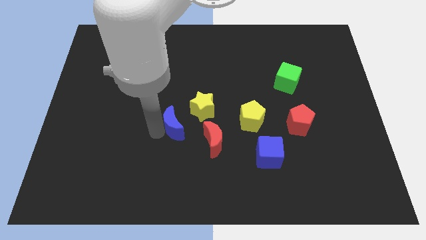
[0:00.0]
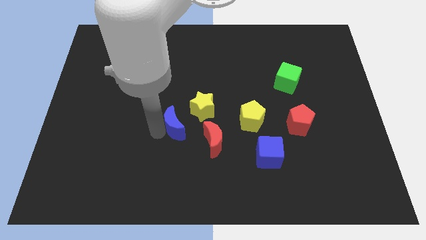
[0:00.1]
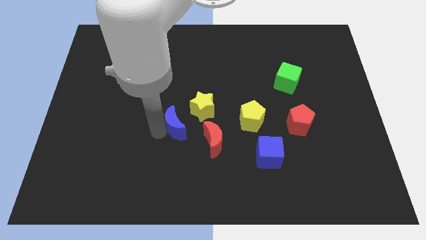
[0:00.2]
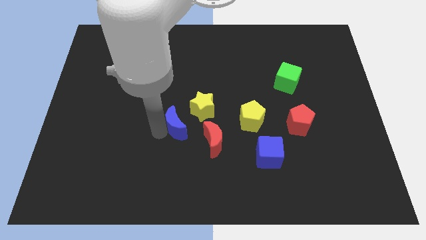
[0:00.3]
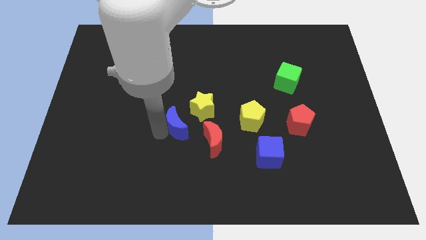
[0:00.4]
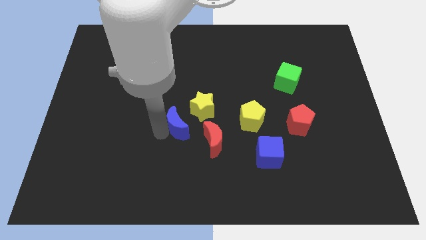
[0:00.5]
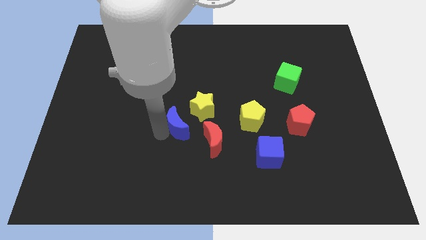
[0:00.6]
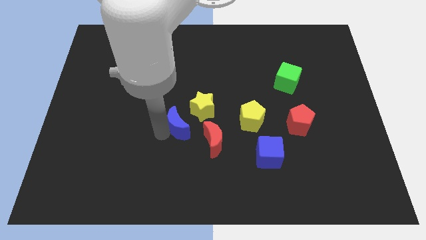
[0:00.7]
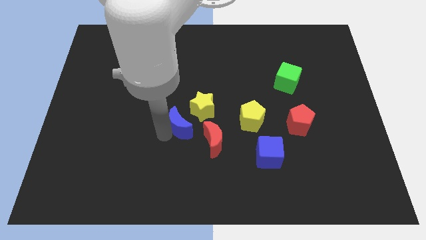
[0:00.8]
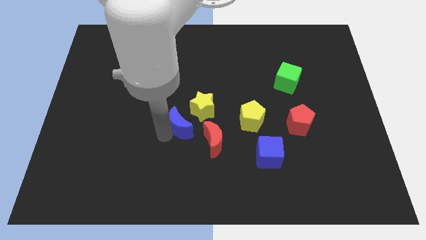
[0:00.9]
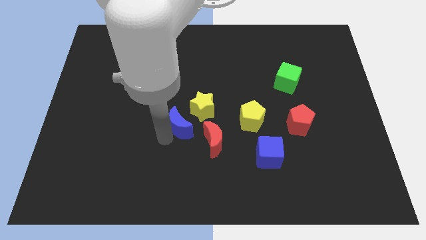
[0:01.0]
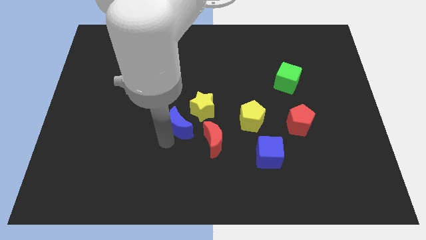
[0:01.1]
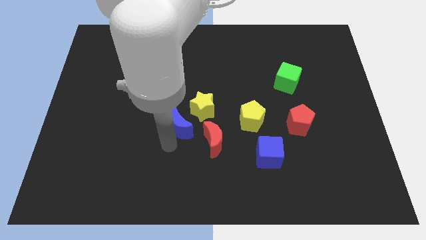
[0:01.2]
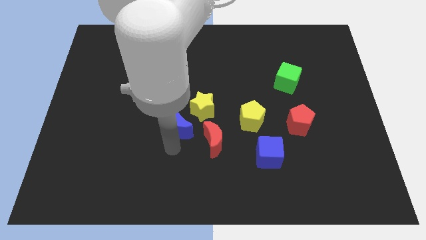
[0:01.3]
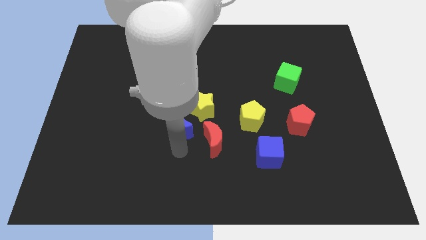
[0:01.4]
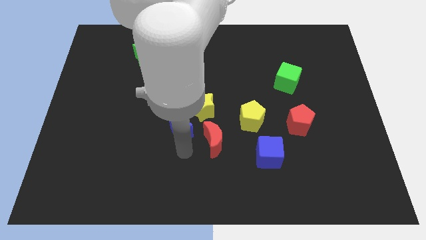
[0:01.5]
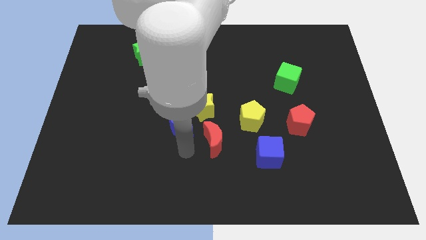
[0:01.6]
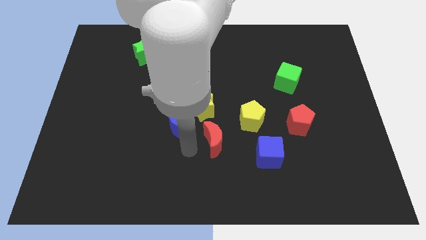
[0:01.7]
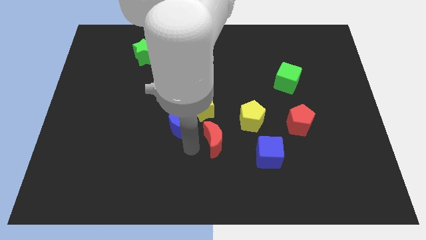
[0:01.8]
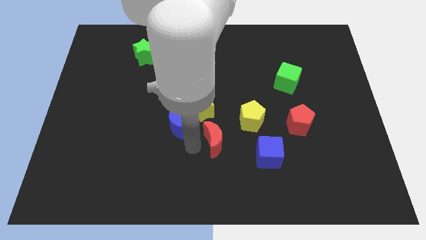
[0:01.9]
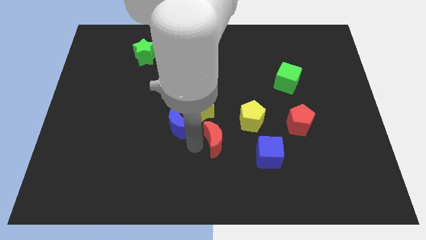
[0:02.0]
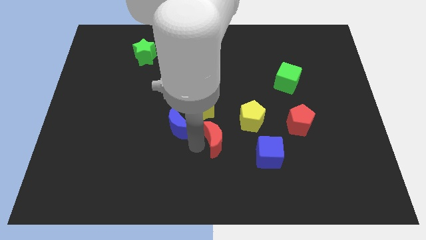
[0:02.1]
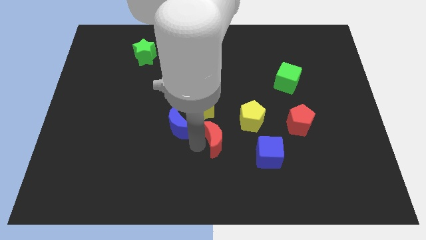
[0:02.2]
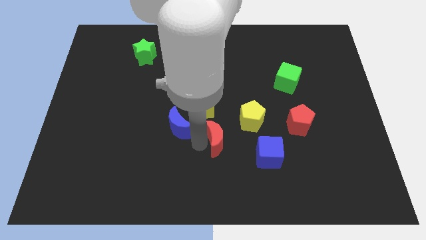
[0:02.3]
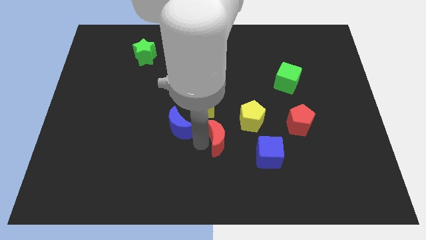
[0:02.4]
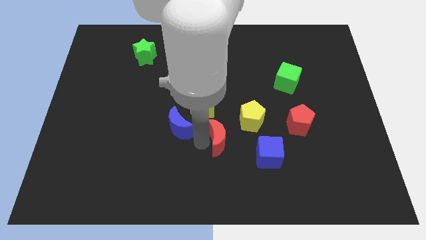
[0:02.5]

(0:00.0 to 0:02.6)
place your arm close to red moon

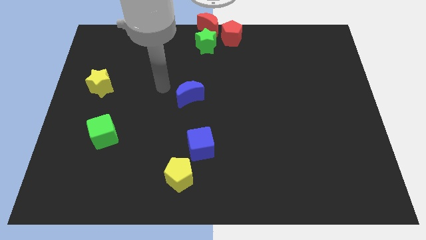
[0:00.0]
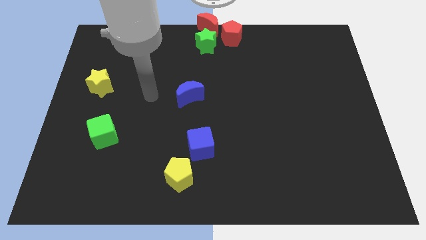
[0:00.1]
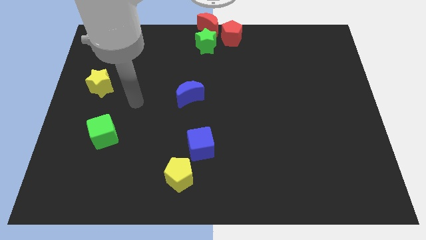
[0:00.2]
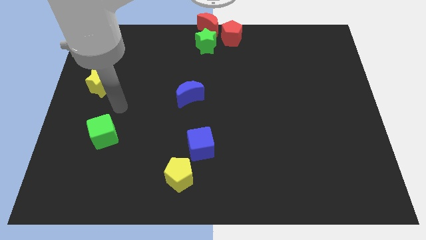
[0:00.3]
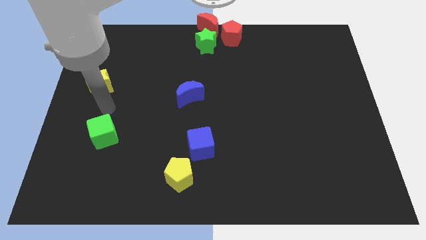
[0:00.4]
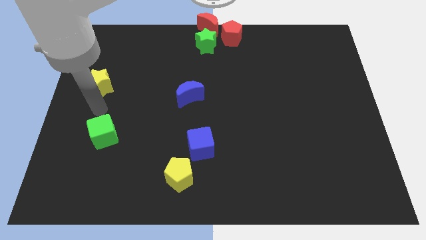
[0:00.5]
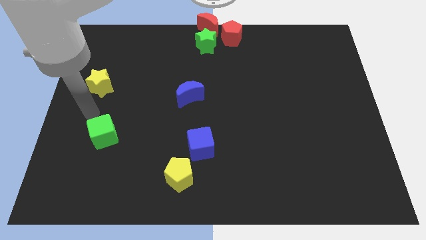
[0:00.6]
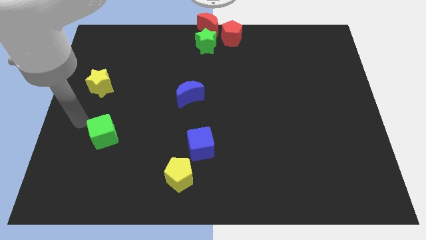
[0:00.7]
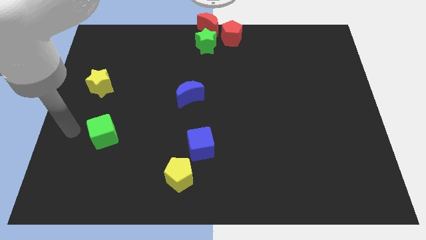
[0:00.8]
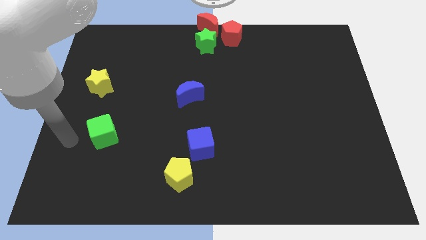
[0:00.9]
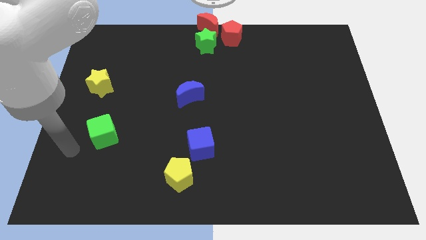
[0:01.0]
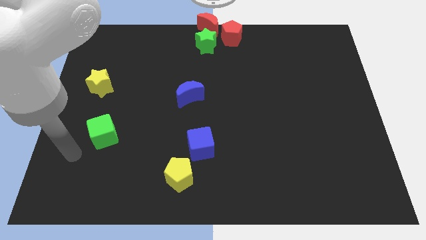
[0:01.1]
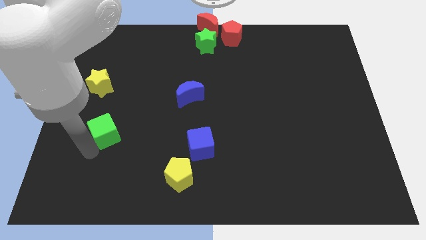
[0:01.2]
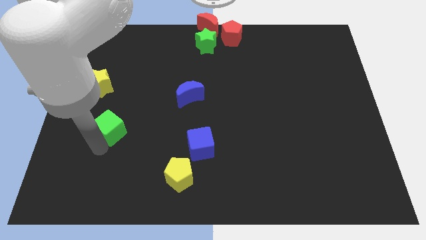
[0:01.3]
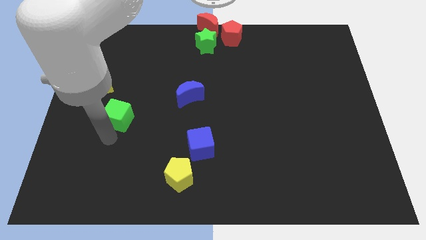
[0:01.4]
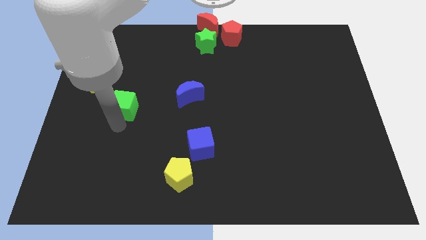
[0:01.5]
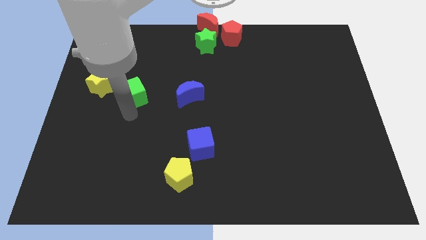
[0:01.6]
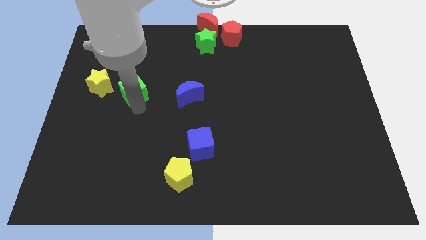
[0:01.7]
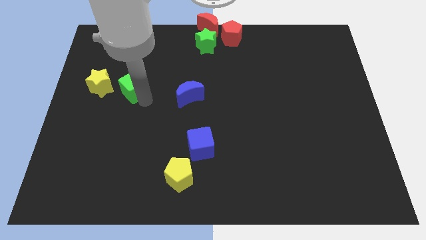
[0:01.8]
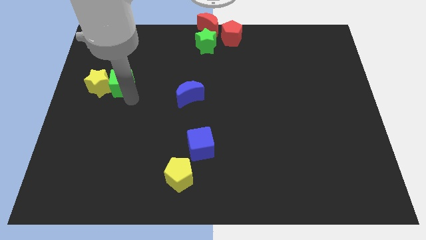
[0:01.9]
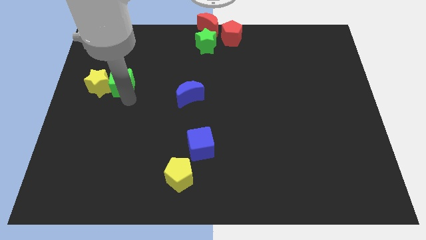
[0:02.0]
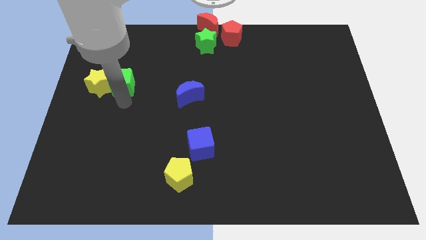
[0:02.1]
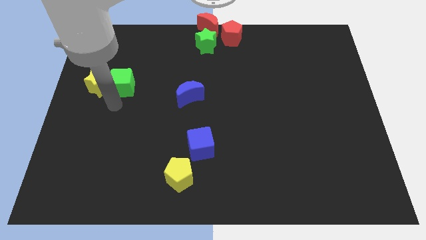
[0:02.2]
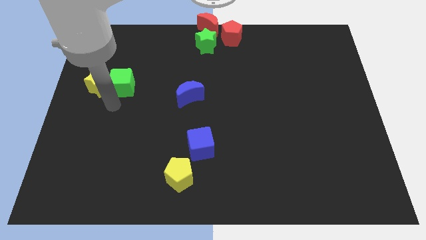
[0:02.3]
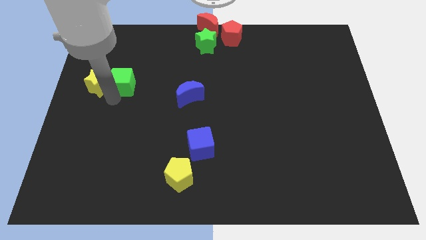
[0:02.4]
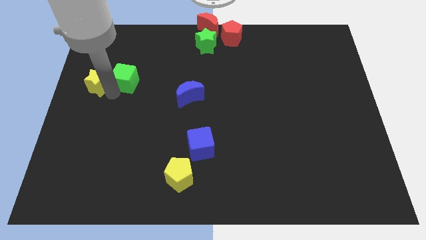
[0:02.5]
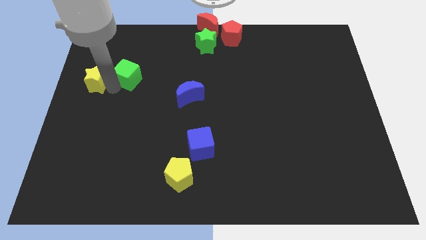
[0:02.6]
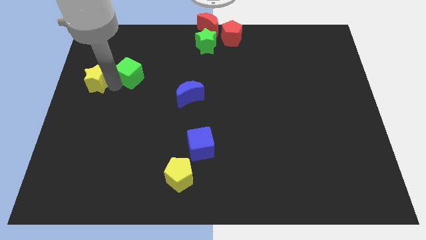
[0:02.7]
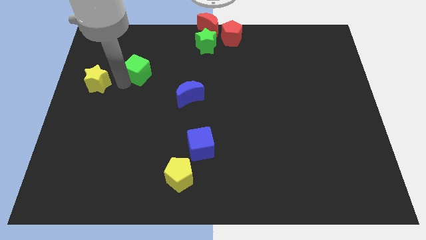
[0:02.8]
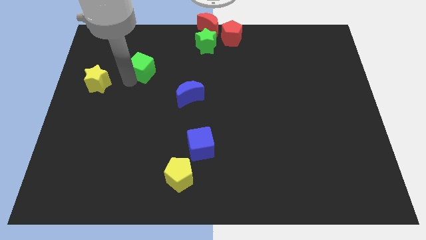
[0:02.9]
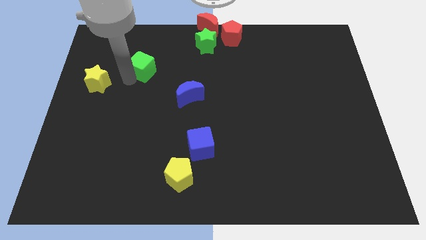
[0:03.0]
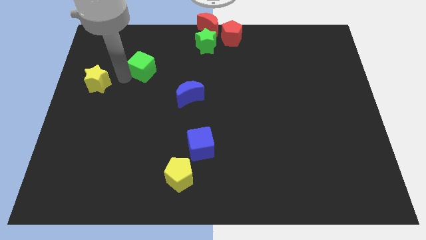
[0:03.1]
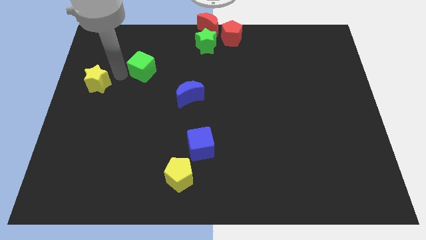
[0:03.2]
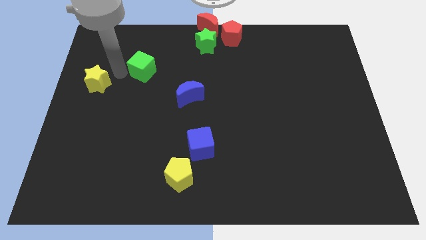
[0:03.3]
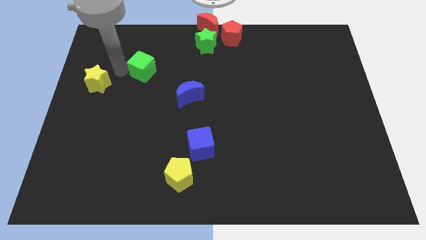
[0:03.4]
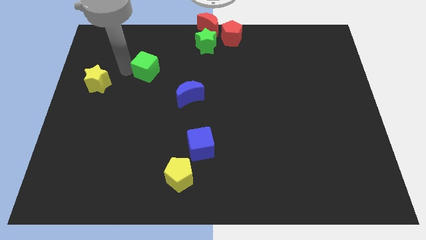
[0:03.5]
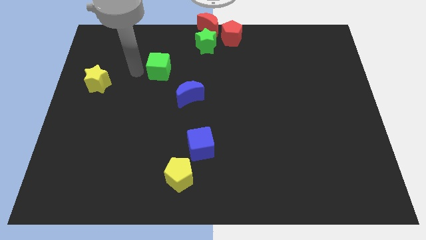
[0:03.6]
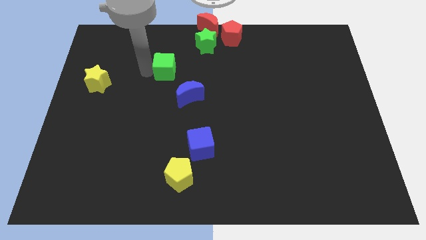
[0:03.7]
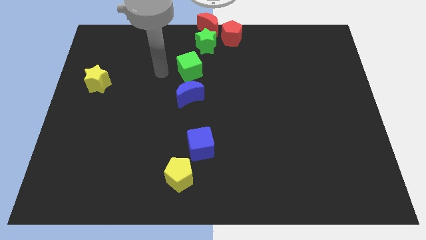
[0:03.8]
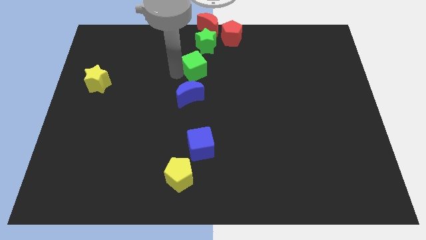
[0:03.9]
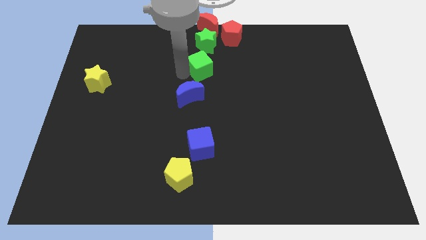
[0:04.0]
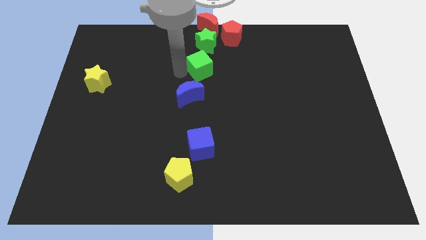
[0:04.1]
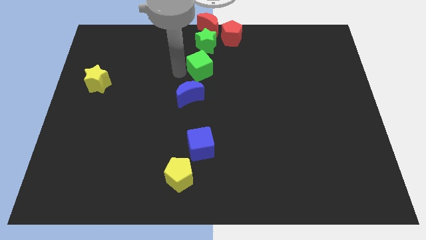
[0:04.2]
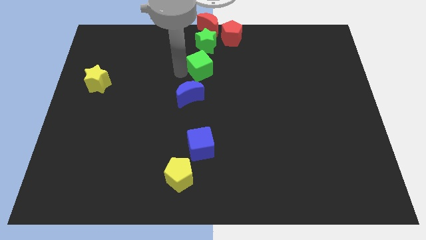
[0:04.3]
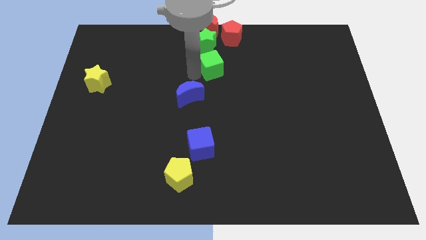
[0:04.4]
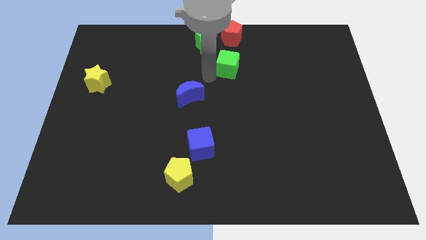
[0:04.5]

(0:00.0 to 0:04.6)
move the green cube under to the green star

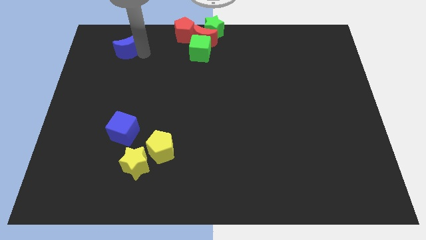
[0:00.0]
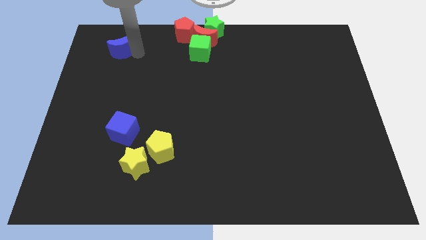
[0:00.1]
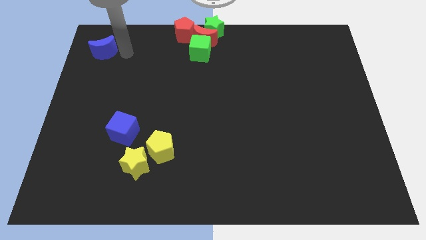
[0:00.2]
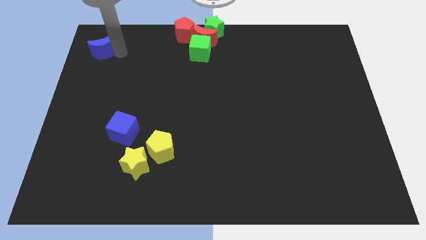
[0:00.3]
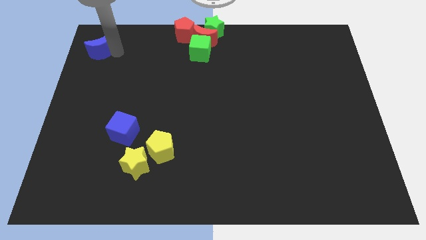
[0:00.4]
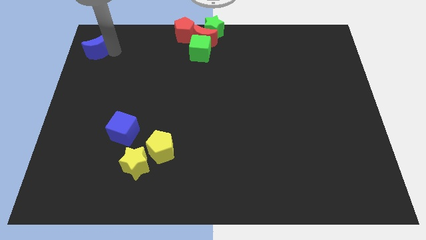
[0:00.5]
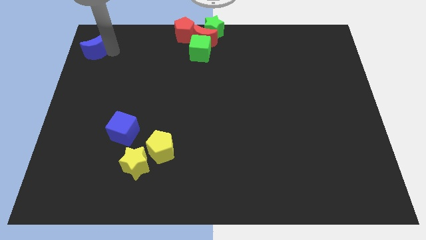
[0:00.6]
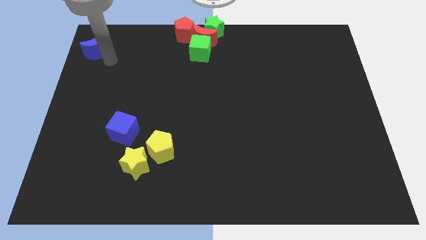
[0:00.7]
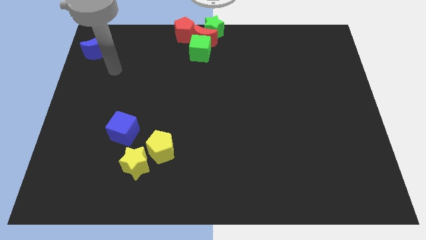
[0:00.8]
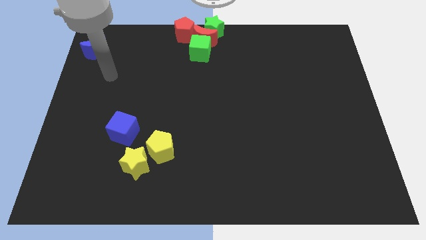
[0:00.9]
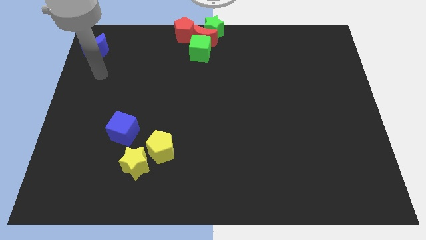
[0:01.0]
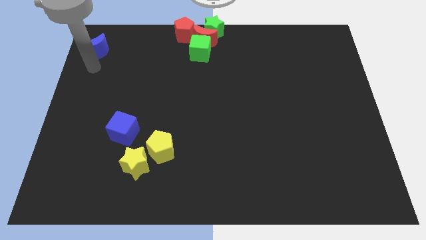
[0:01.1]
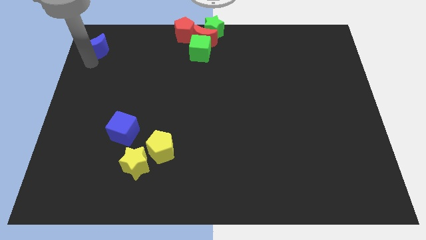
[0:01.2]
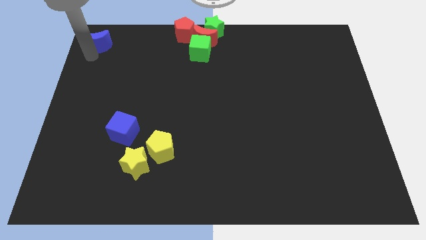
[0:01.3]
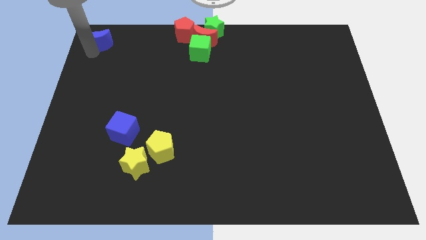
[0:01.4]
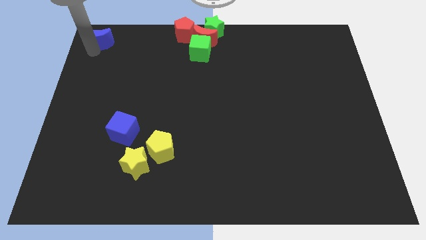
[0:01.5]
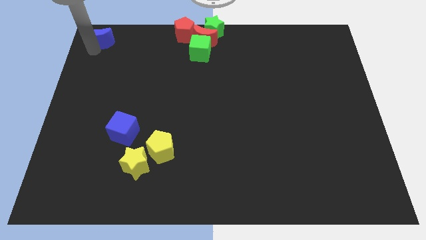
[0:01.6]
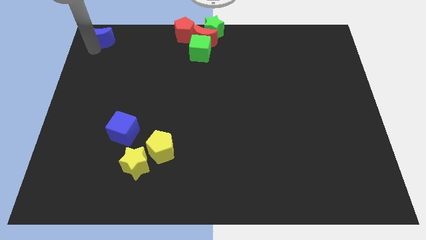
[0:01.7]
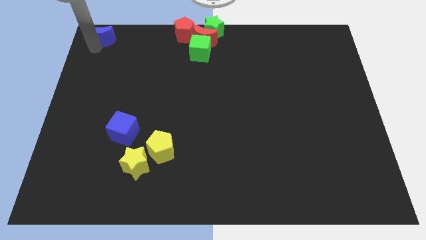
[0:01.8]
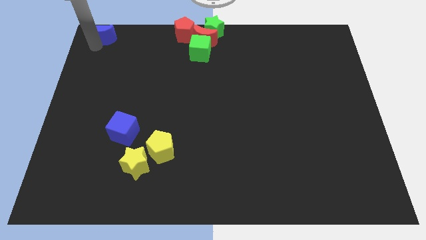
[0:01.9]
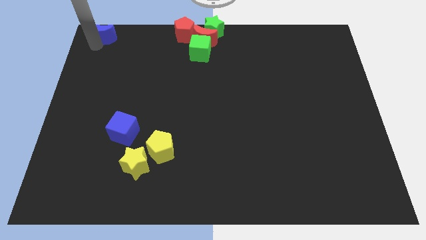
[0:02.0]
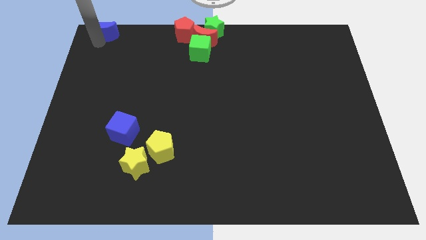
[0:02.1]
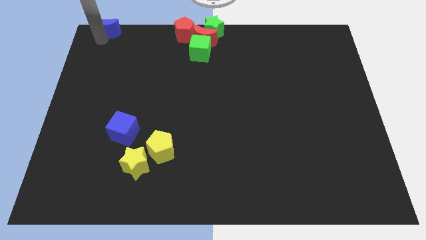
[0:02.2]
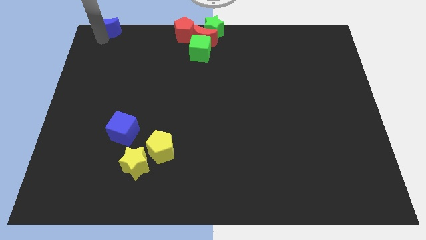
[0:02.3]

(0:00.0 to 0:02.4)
place blue crescent towards left corner upwards
